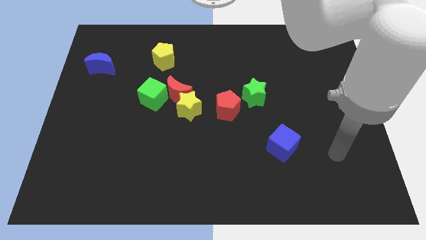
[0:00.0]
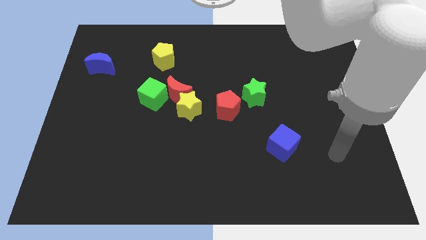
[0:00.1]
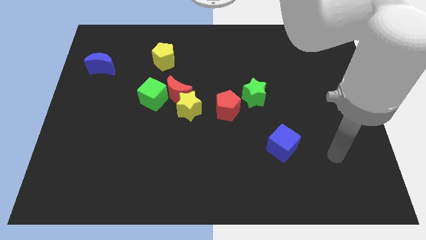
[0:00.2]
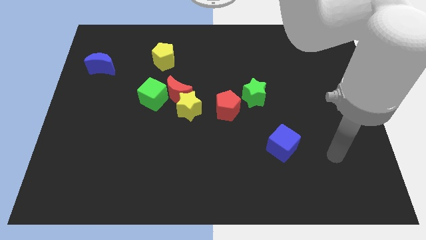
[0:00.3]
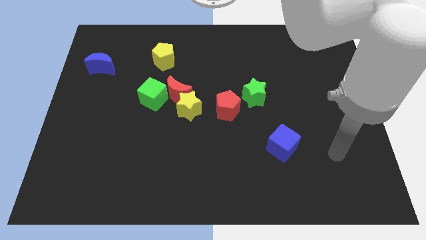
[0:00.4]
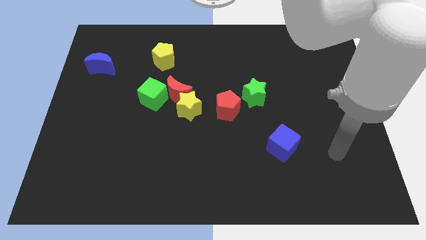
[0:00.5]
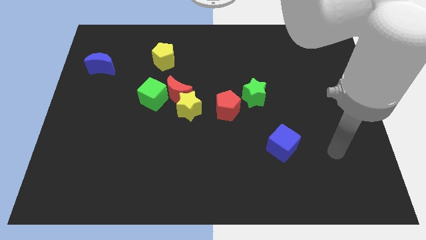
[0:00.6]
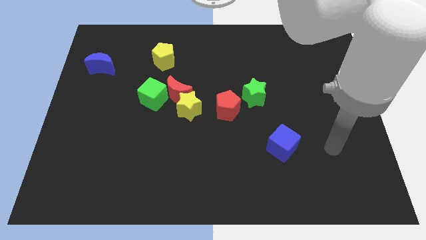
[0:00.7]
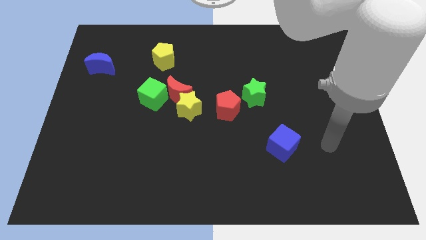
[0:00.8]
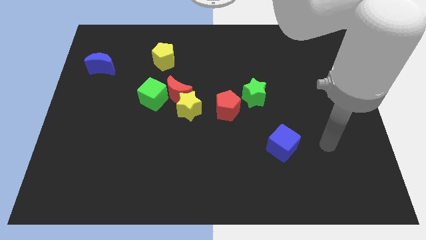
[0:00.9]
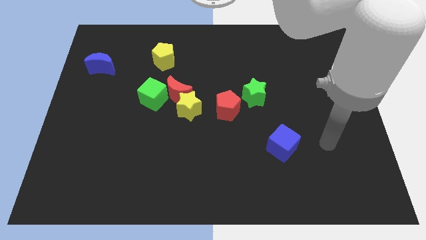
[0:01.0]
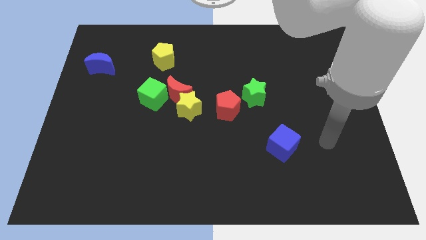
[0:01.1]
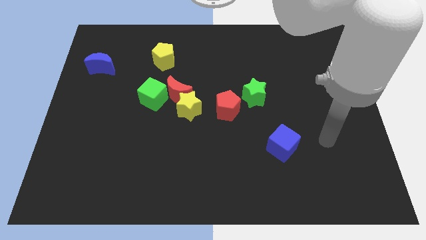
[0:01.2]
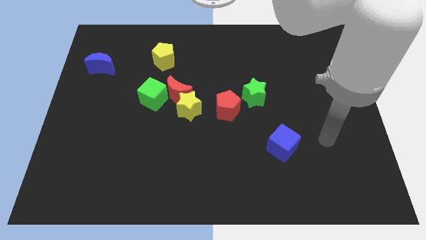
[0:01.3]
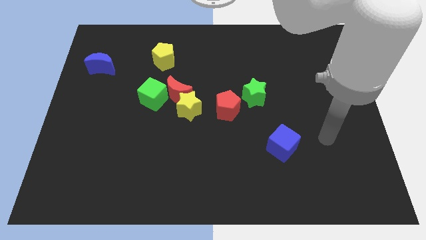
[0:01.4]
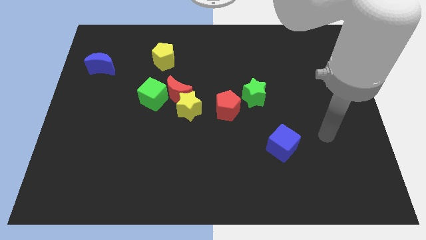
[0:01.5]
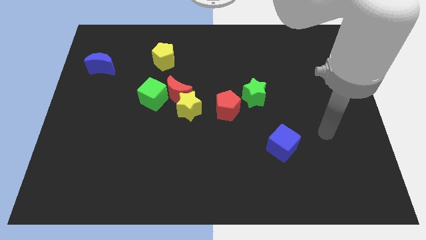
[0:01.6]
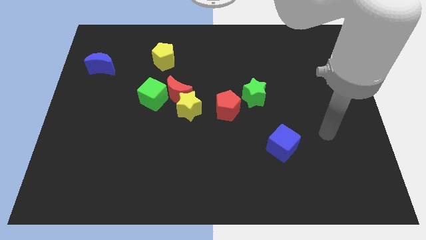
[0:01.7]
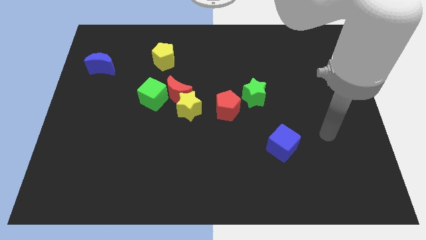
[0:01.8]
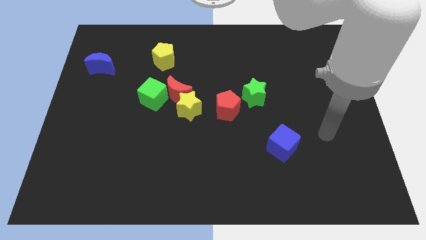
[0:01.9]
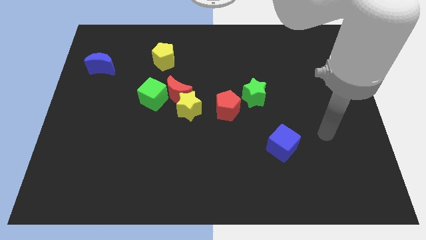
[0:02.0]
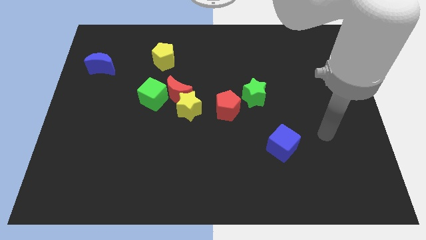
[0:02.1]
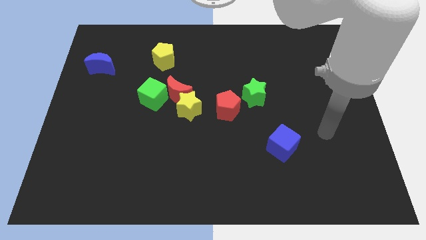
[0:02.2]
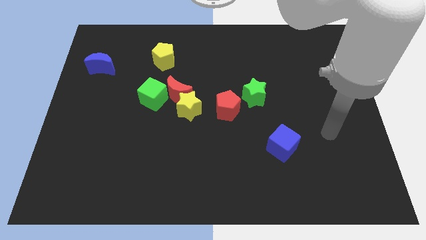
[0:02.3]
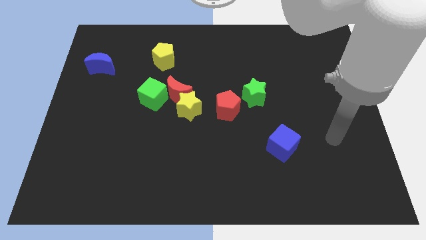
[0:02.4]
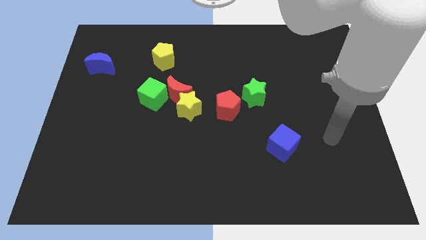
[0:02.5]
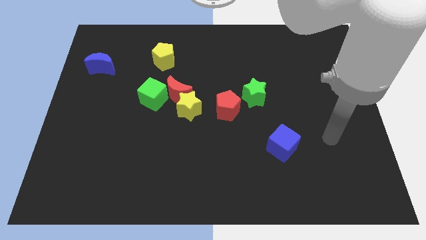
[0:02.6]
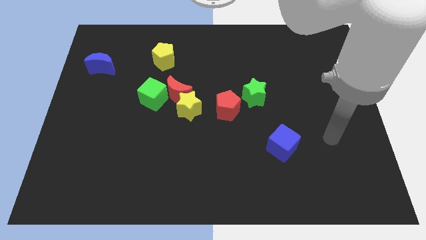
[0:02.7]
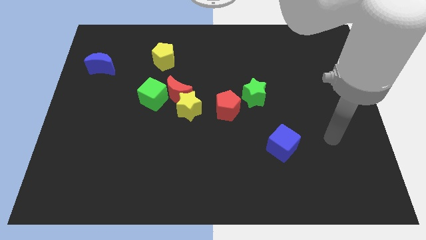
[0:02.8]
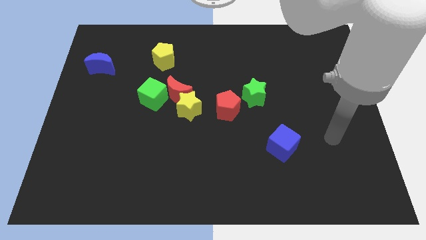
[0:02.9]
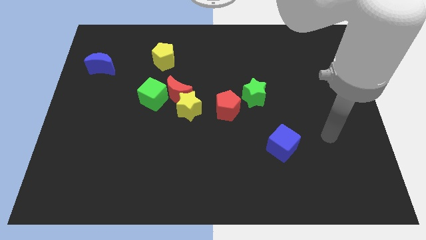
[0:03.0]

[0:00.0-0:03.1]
place your arm to the top right side of the blue cube

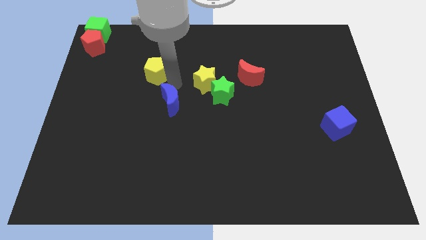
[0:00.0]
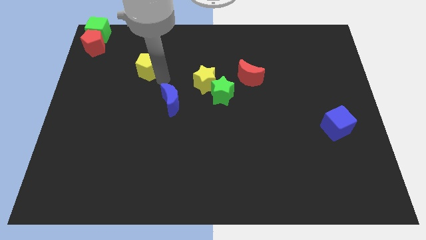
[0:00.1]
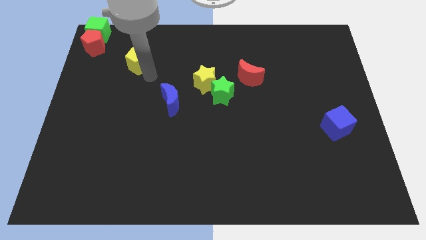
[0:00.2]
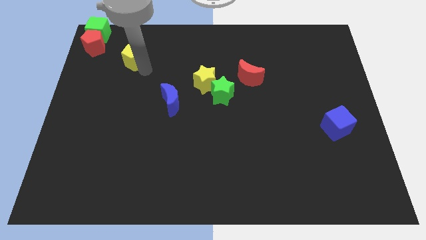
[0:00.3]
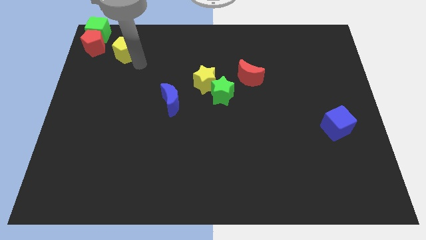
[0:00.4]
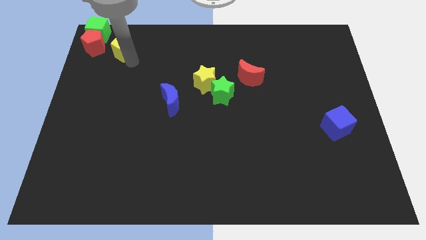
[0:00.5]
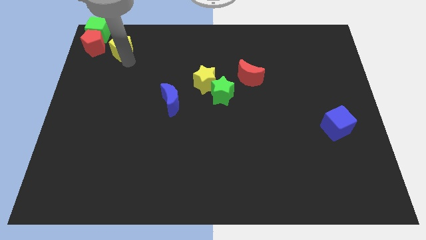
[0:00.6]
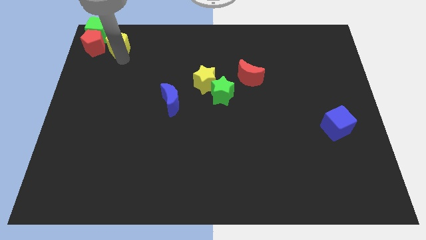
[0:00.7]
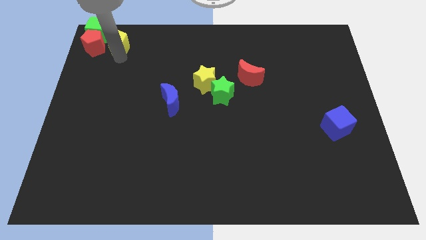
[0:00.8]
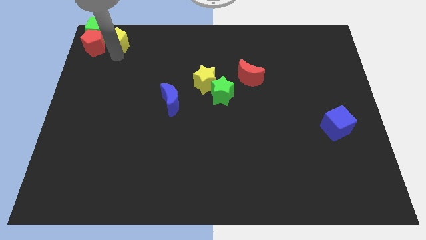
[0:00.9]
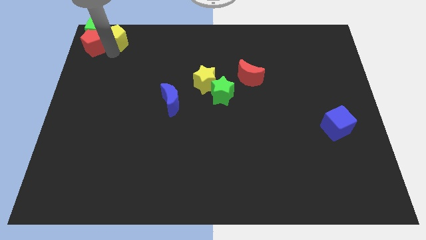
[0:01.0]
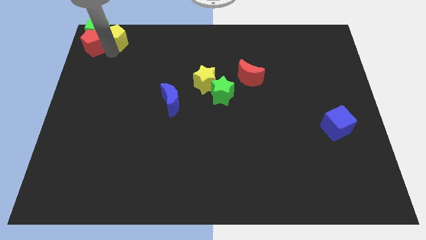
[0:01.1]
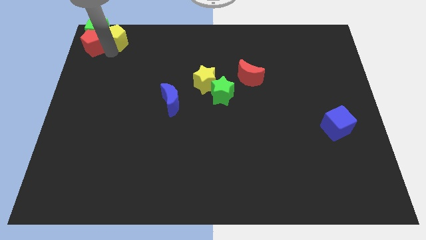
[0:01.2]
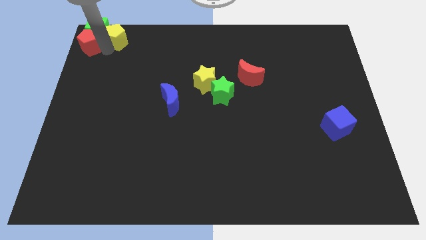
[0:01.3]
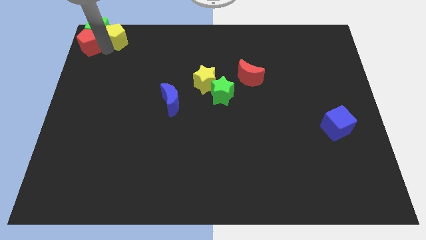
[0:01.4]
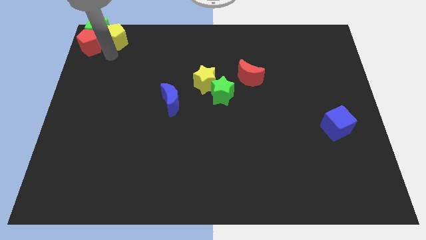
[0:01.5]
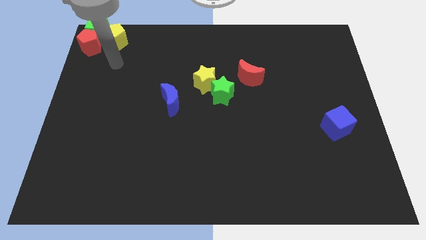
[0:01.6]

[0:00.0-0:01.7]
move the yellow pentagon into the red pentagon

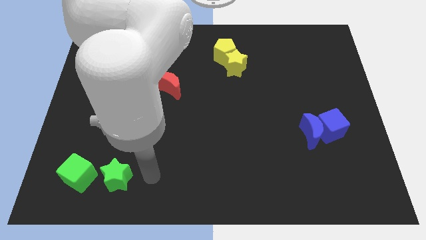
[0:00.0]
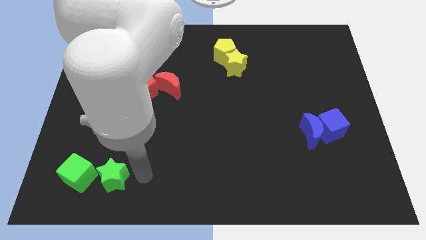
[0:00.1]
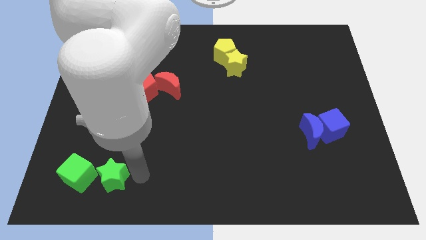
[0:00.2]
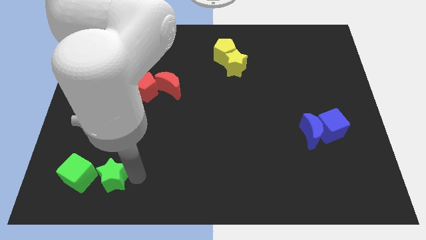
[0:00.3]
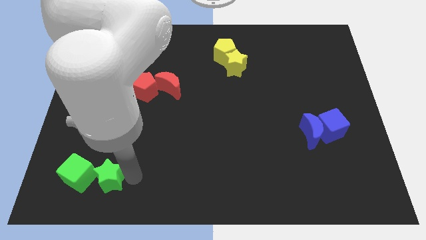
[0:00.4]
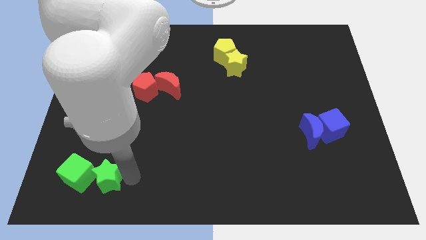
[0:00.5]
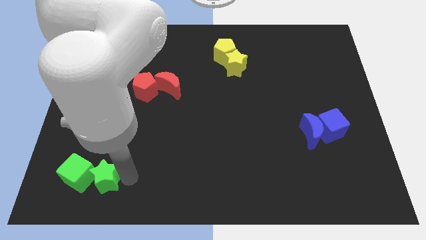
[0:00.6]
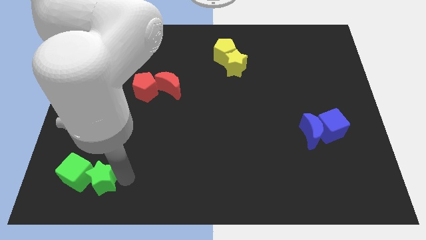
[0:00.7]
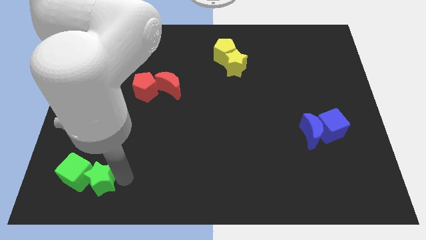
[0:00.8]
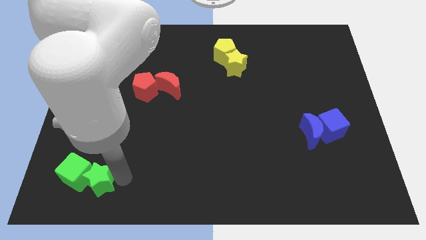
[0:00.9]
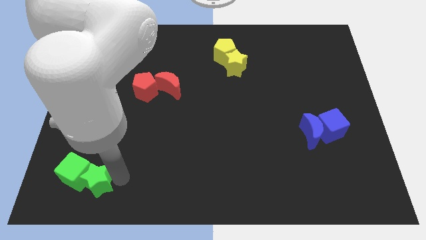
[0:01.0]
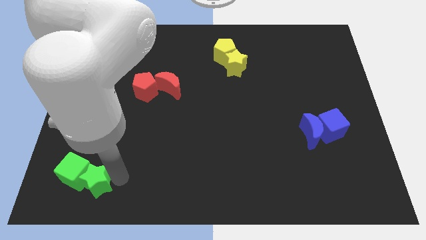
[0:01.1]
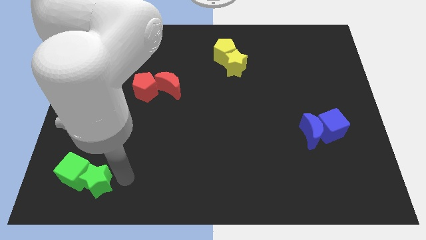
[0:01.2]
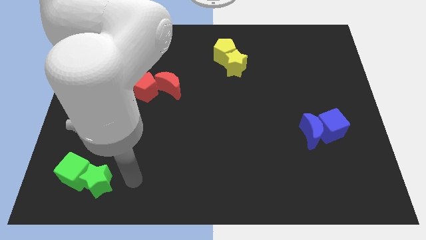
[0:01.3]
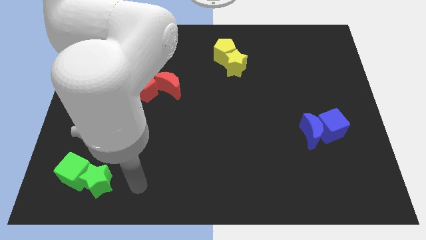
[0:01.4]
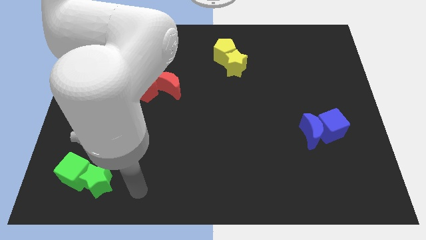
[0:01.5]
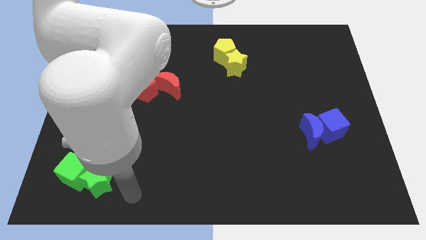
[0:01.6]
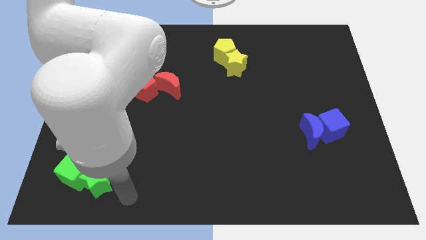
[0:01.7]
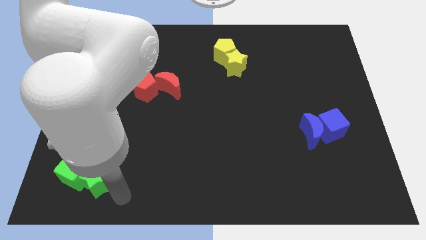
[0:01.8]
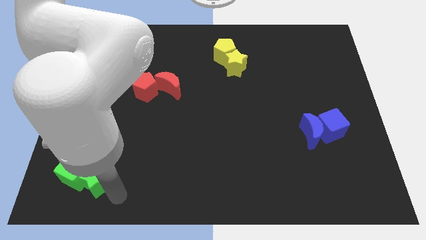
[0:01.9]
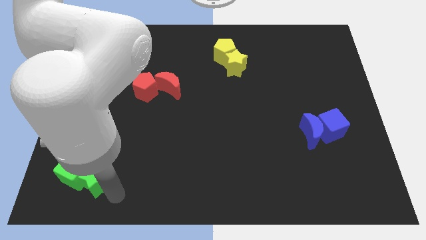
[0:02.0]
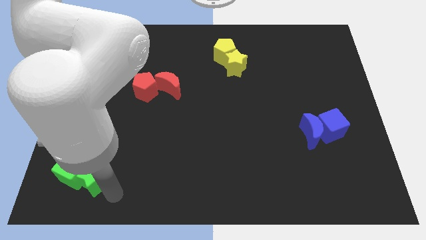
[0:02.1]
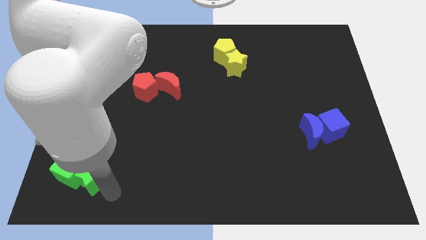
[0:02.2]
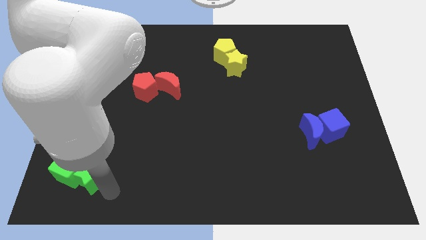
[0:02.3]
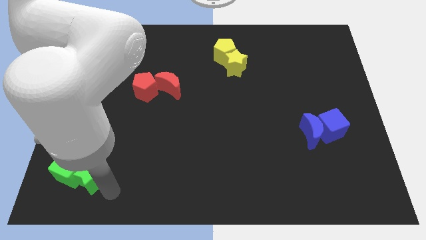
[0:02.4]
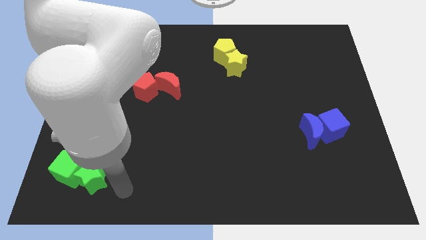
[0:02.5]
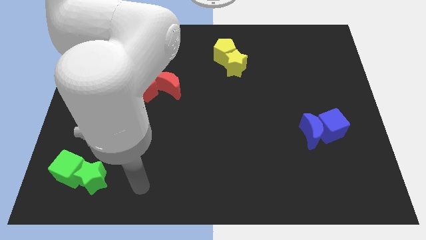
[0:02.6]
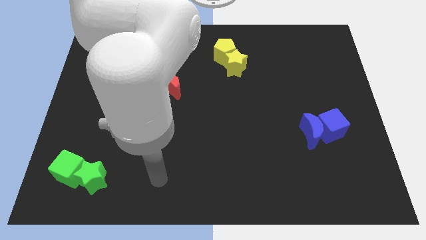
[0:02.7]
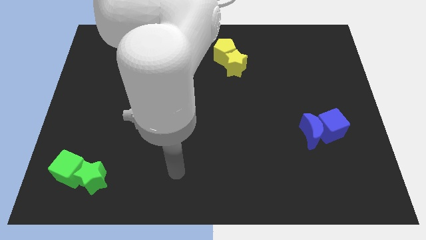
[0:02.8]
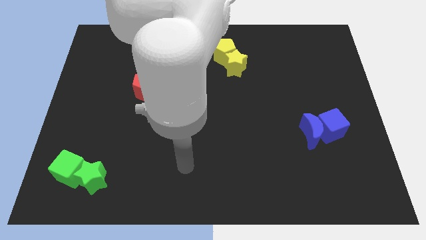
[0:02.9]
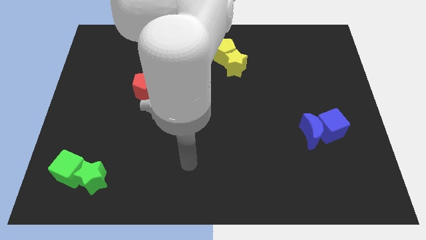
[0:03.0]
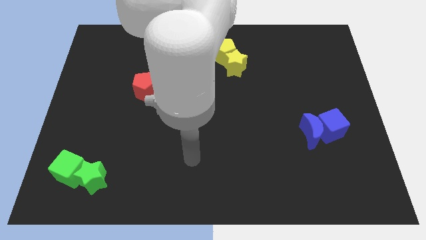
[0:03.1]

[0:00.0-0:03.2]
place the green blocks together

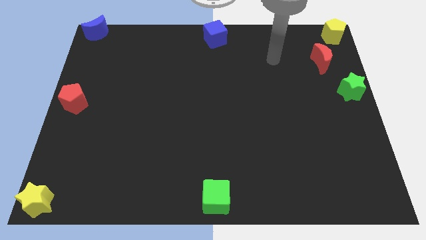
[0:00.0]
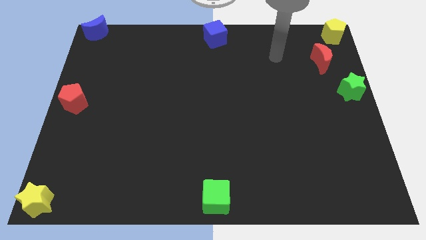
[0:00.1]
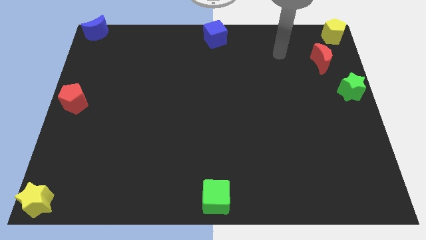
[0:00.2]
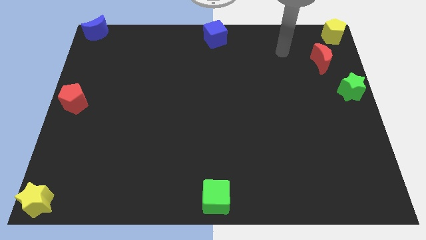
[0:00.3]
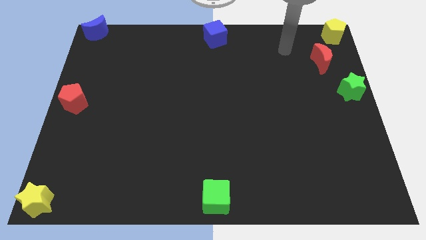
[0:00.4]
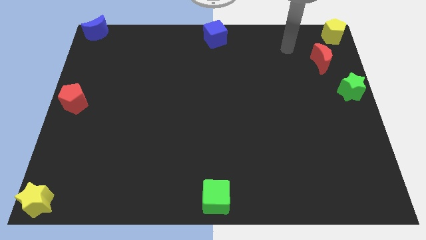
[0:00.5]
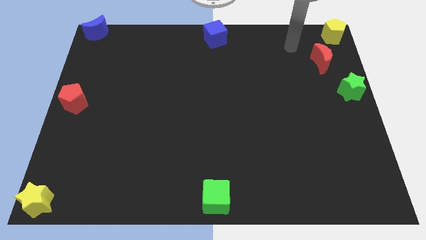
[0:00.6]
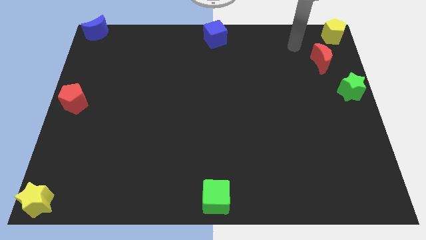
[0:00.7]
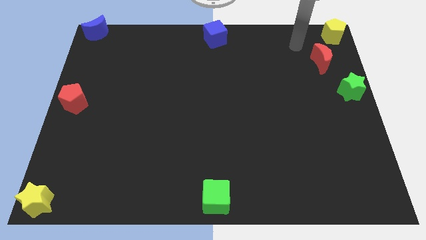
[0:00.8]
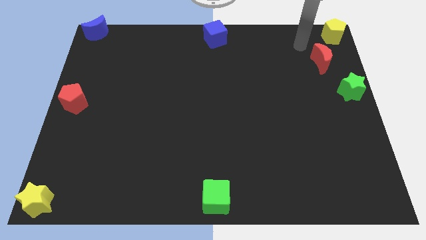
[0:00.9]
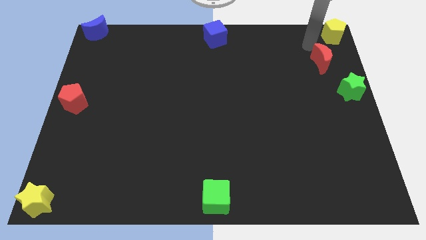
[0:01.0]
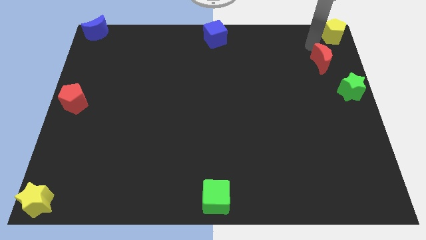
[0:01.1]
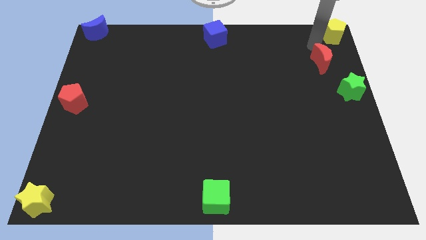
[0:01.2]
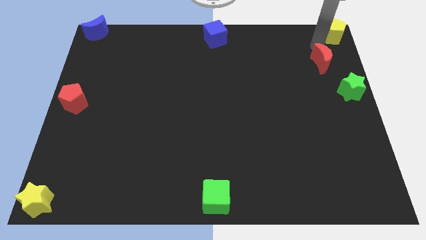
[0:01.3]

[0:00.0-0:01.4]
place your arm at the top of red moon
